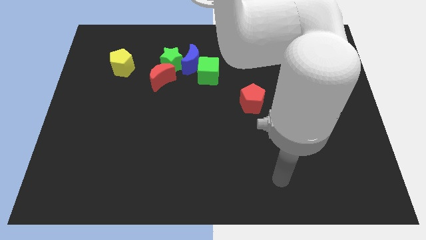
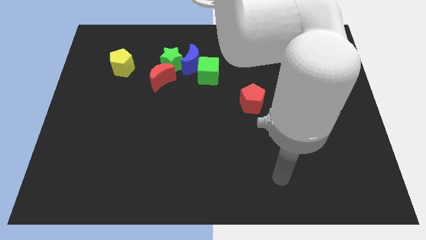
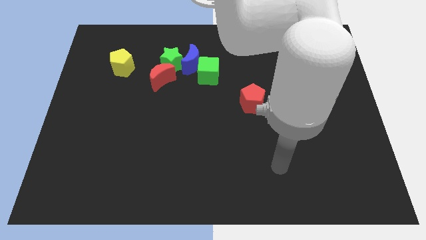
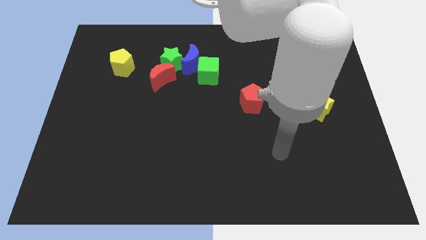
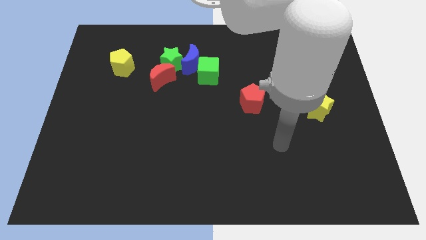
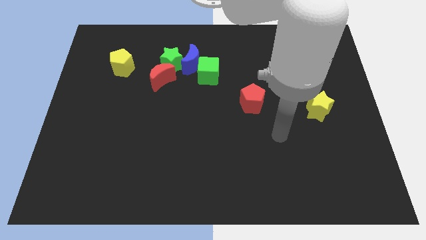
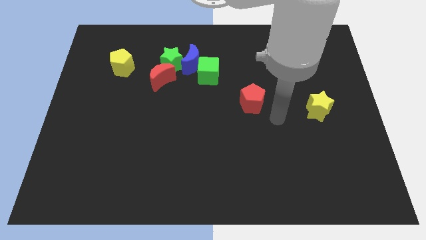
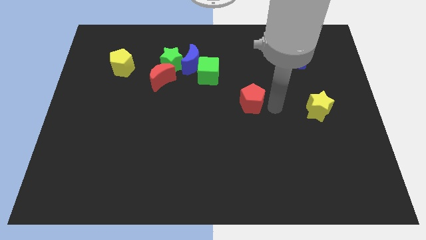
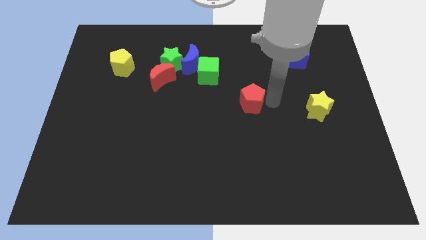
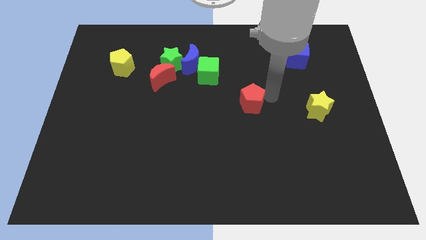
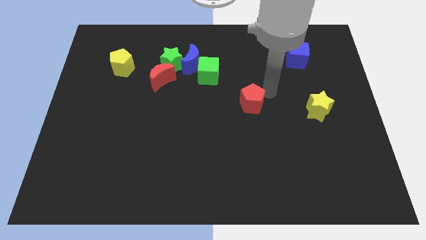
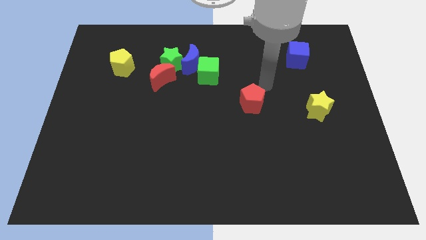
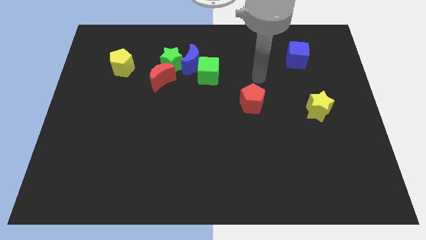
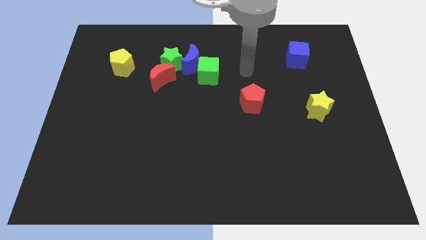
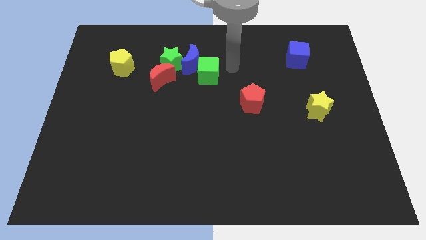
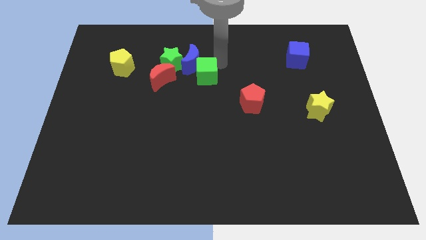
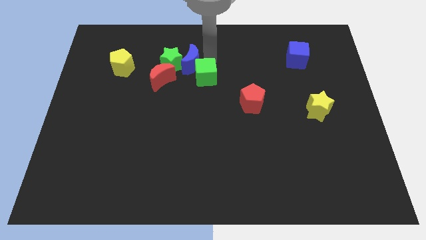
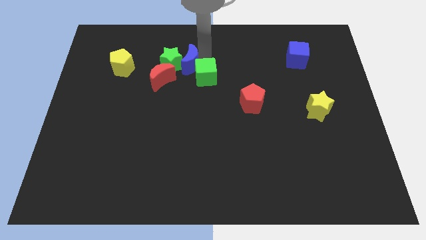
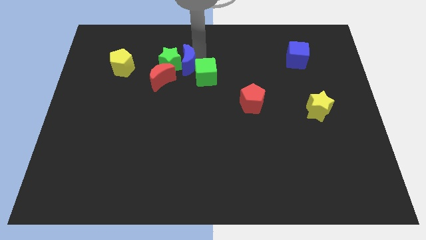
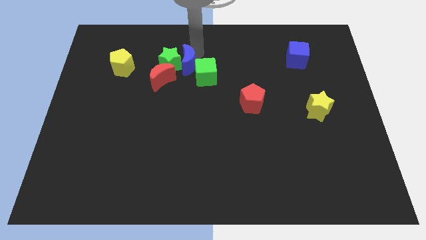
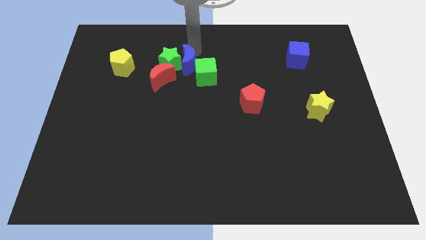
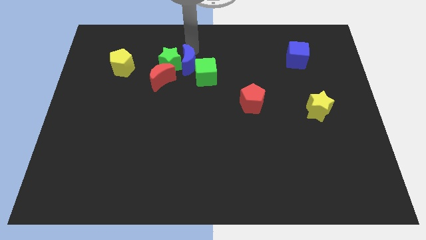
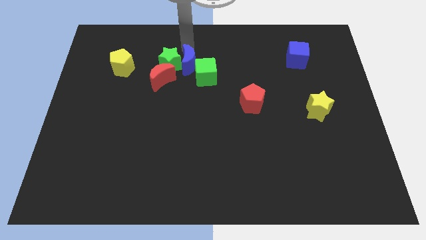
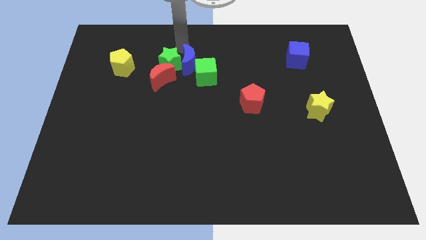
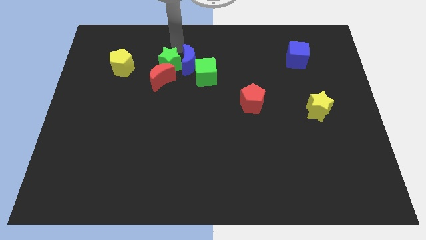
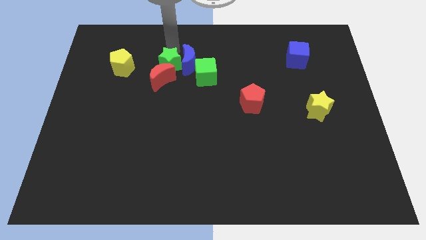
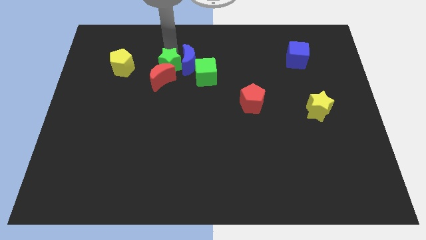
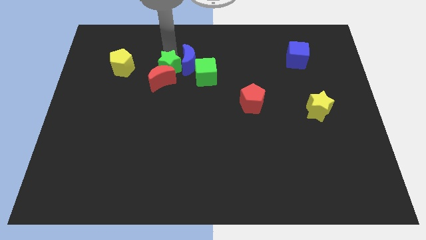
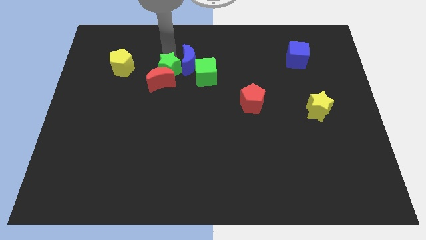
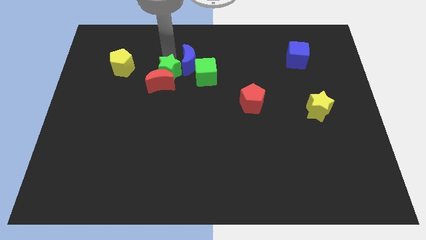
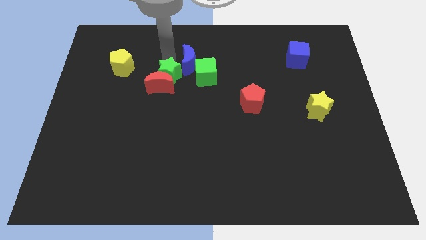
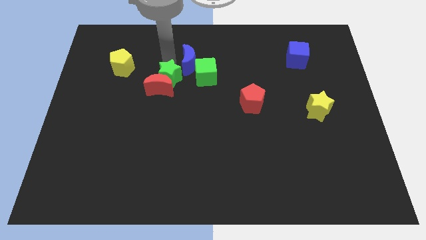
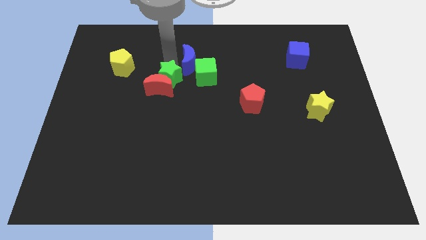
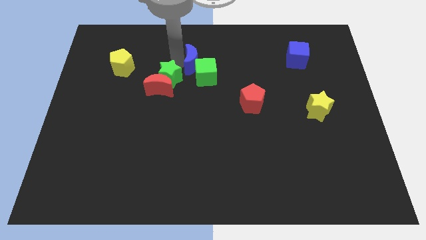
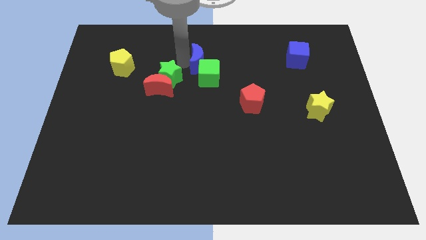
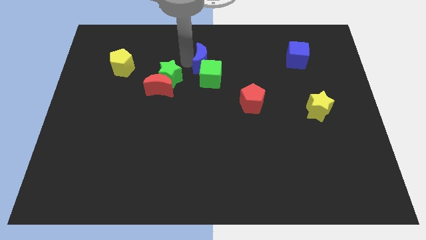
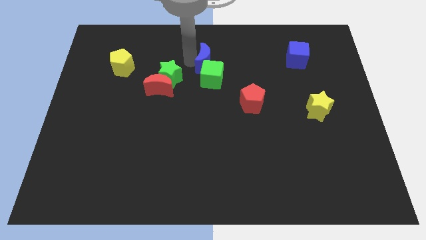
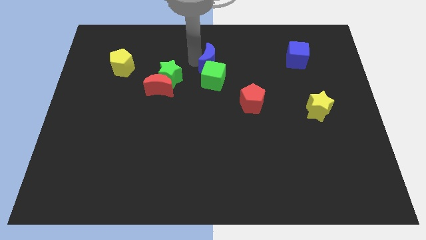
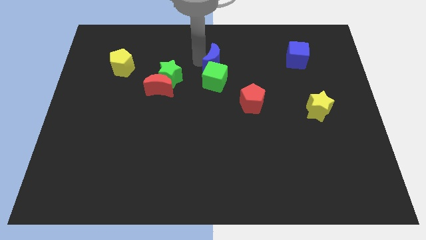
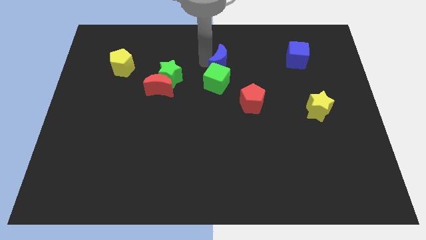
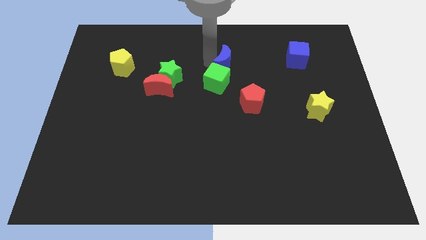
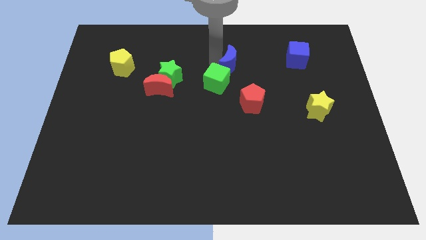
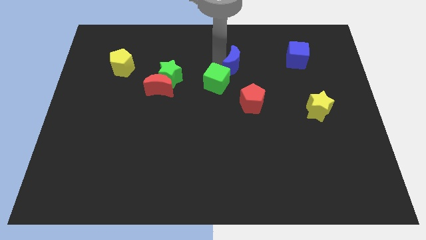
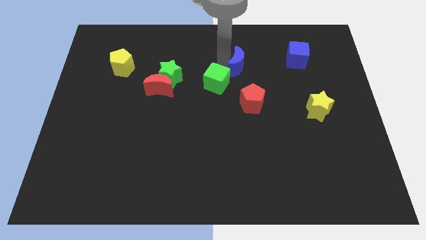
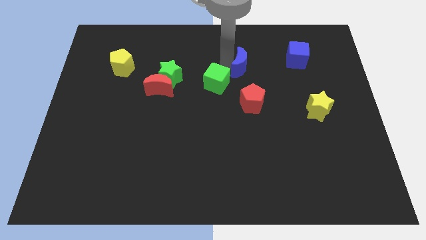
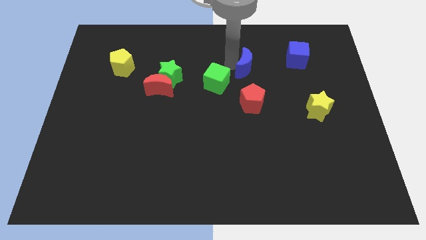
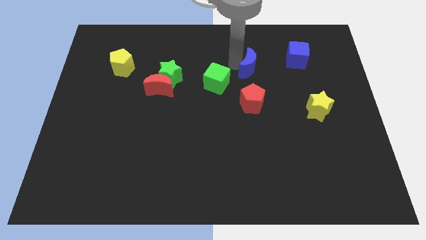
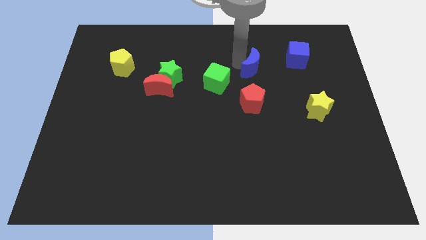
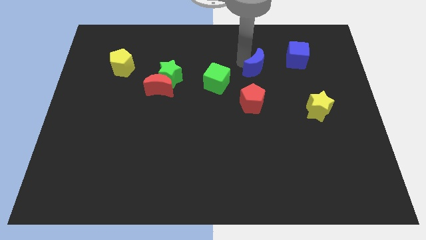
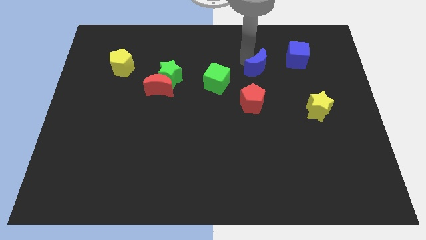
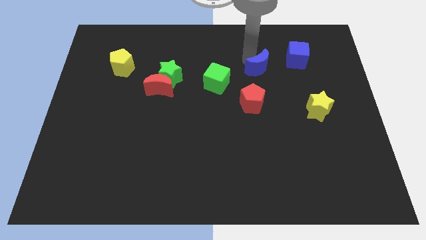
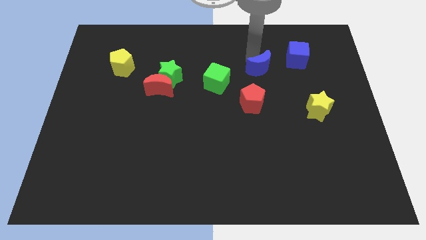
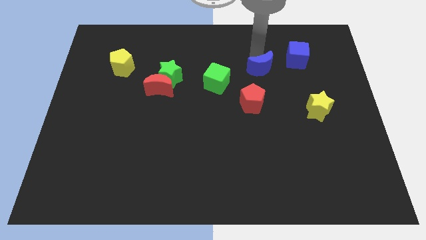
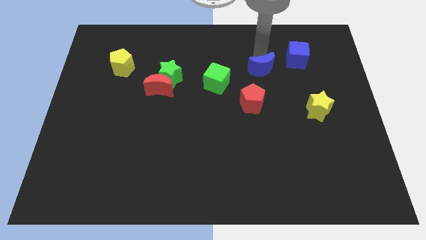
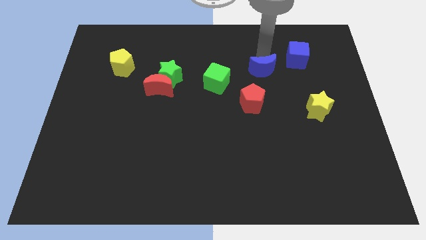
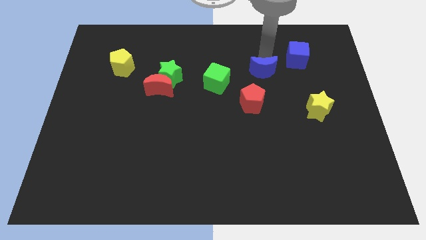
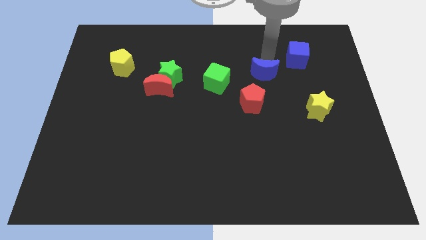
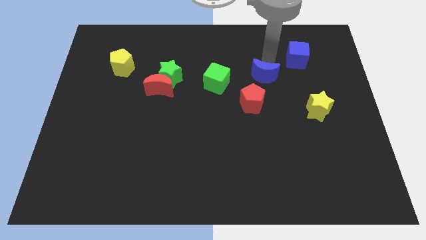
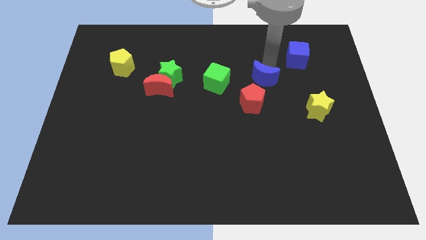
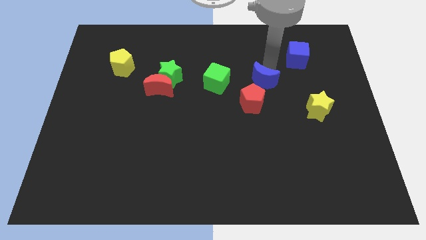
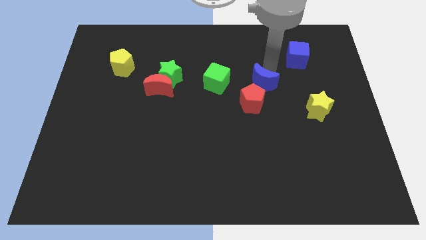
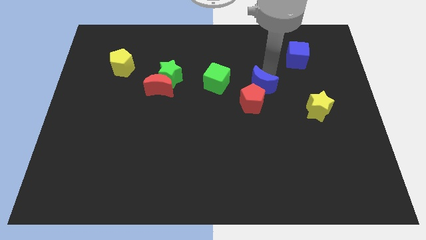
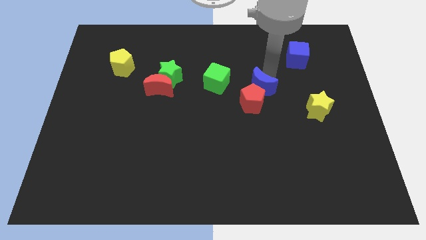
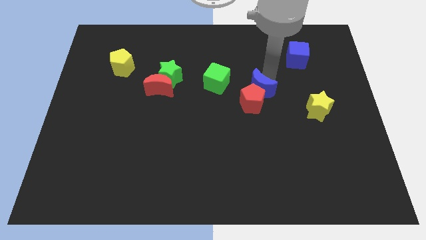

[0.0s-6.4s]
push the blue moon to the red pentagon

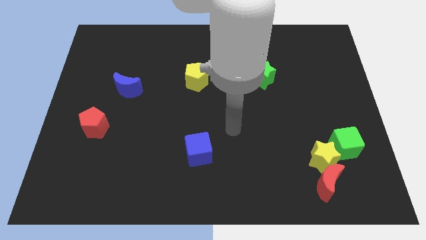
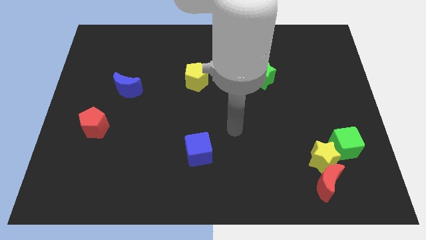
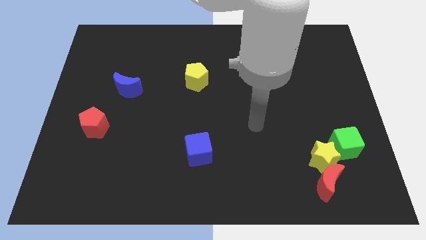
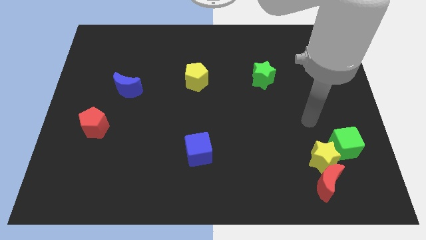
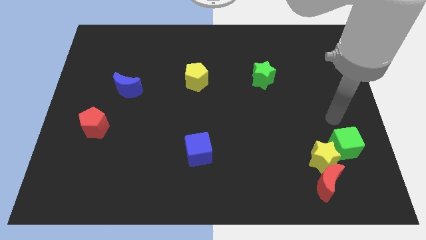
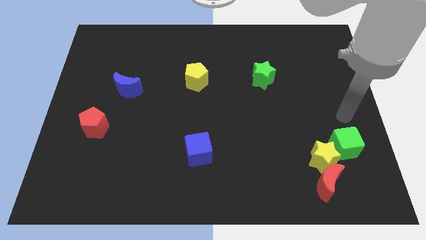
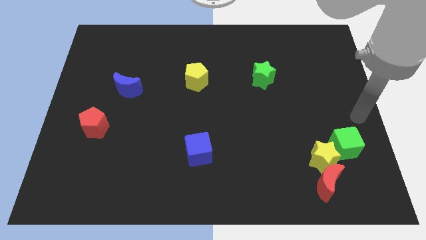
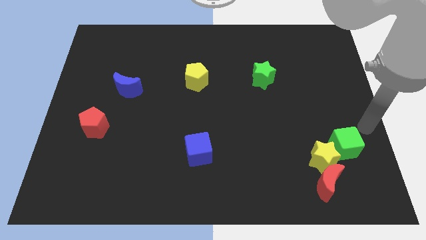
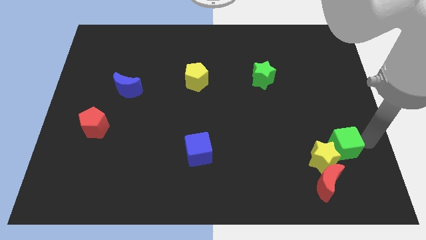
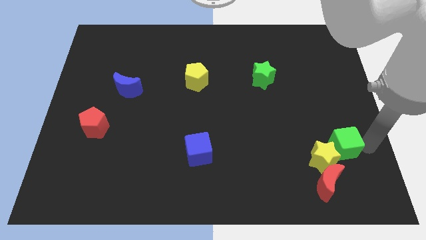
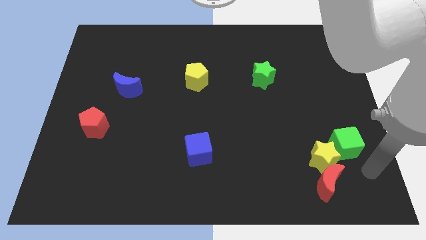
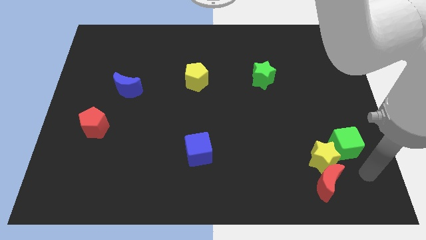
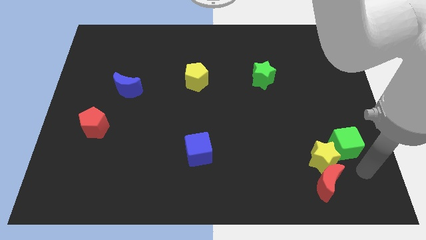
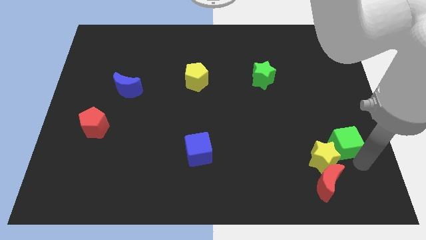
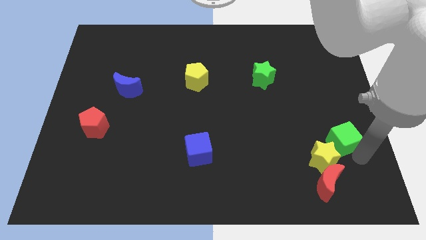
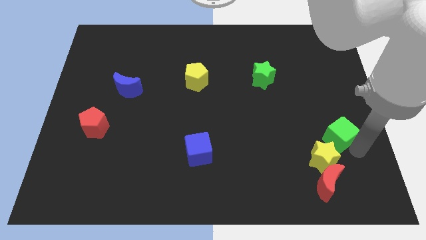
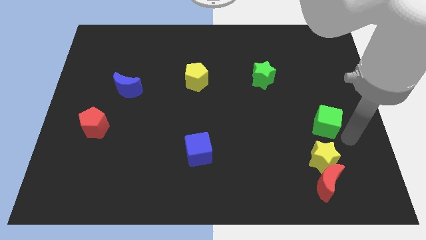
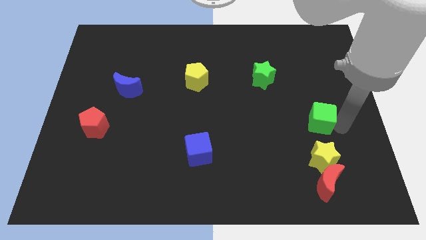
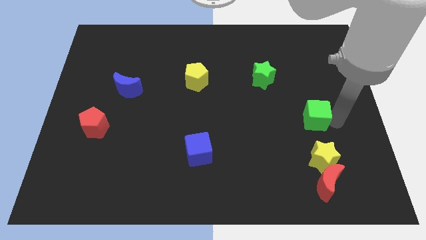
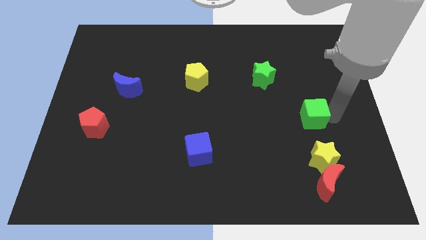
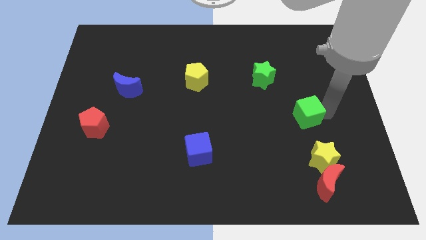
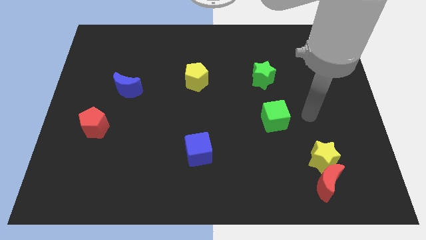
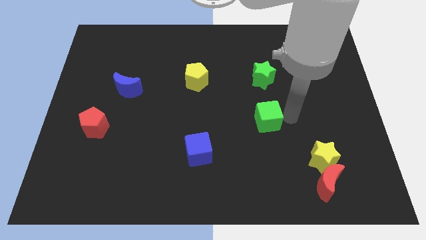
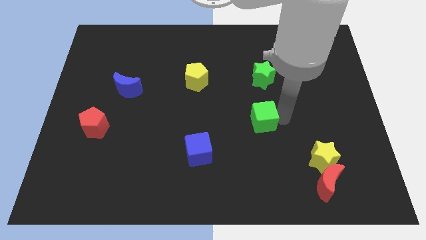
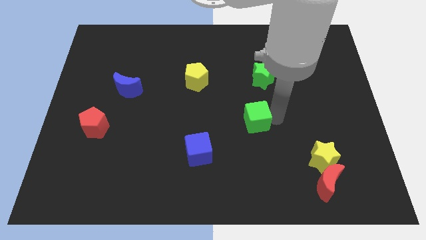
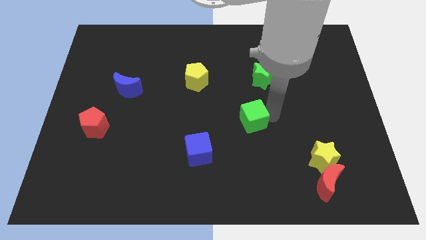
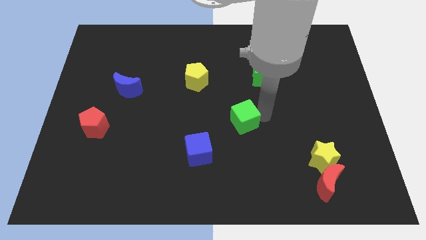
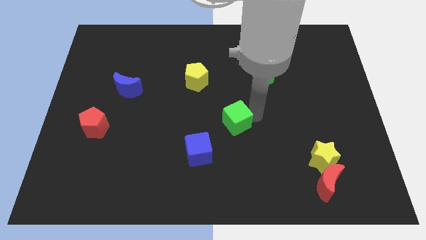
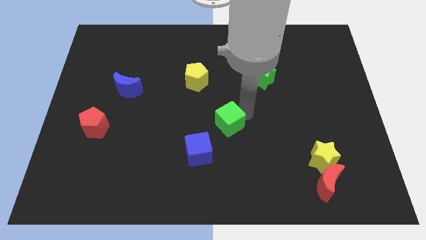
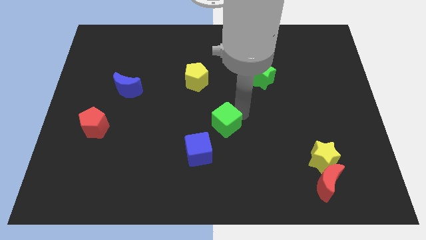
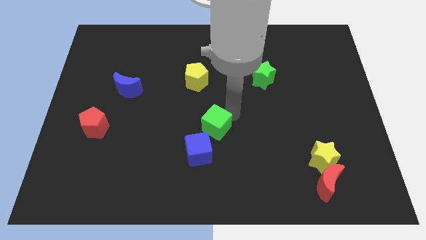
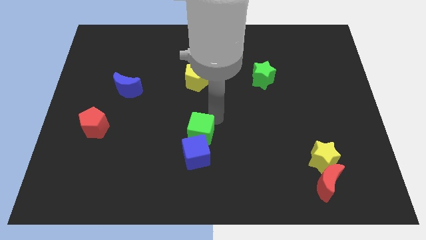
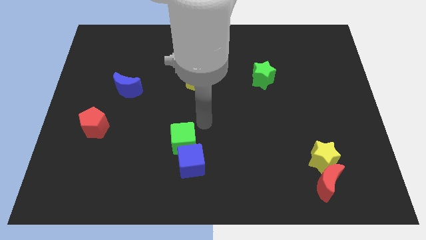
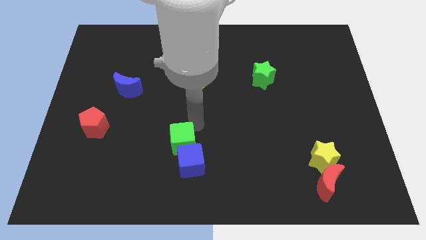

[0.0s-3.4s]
move the green cube towards the blue cube
